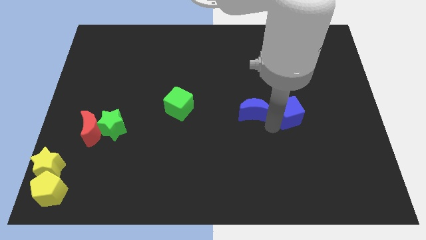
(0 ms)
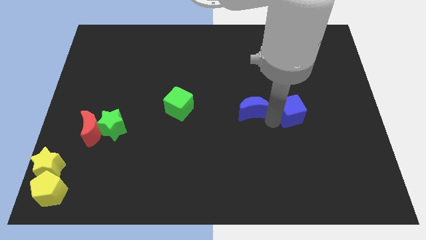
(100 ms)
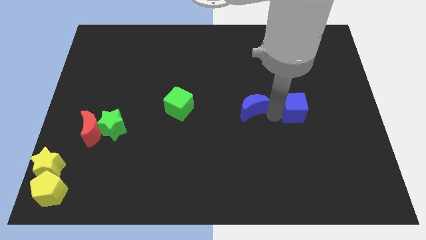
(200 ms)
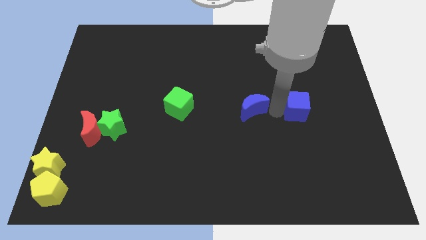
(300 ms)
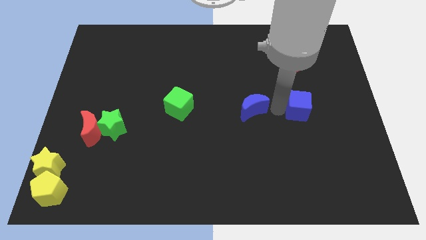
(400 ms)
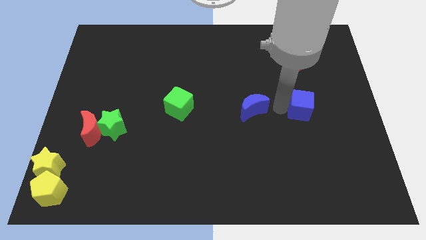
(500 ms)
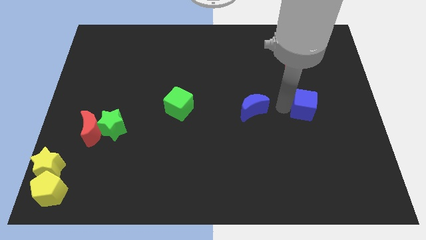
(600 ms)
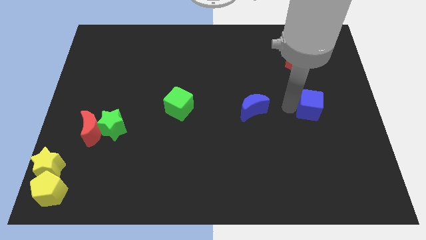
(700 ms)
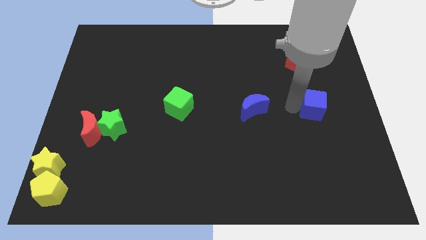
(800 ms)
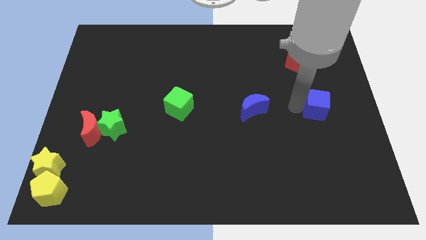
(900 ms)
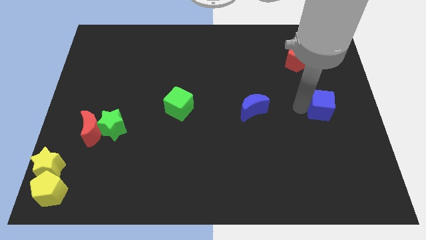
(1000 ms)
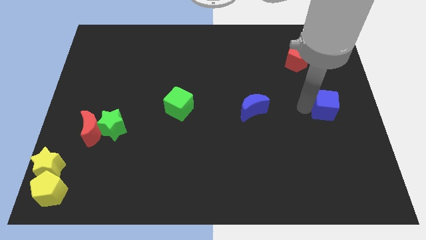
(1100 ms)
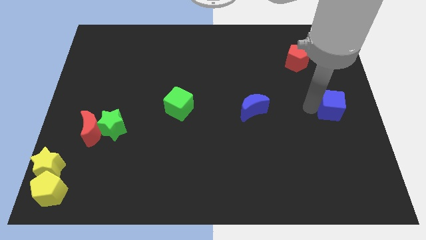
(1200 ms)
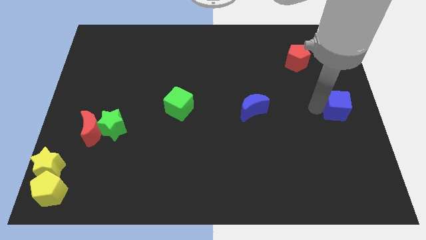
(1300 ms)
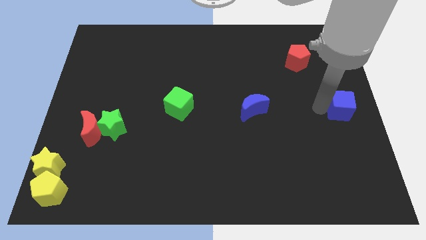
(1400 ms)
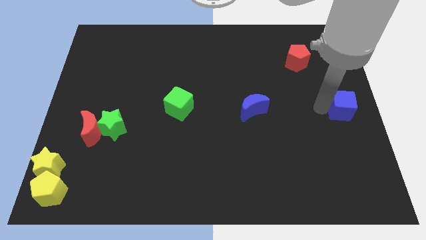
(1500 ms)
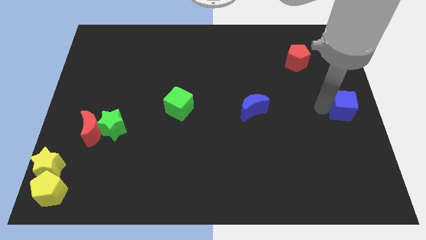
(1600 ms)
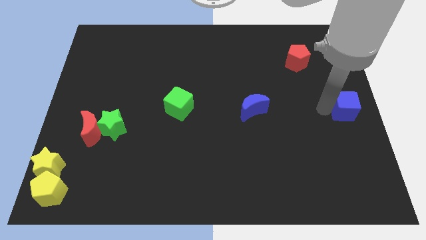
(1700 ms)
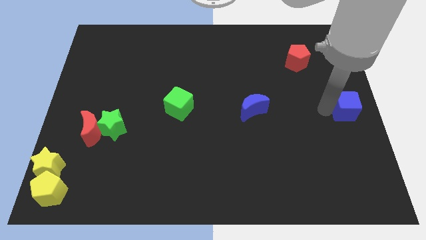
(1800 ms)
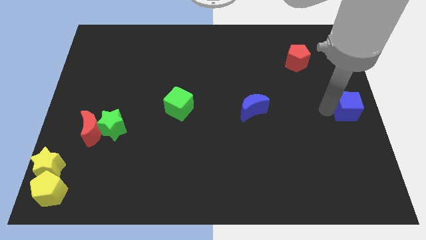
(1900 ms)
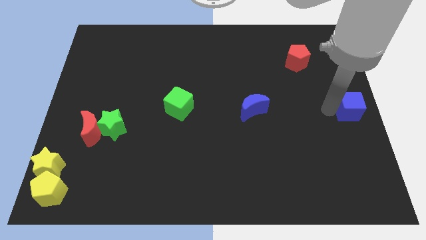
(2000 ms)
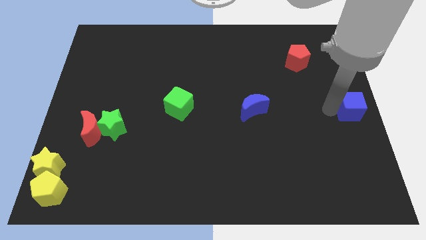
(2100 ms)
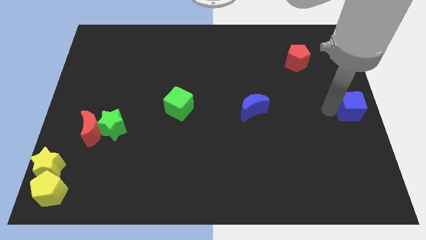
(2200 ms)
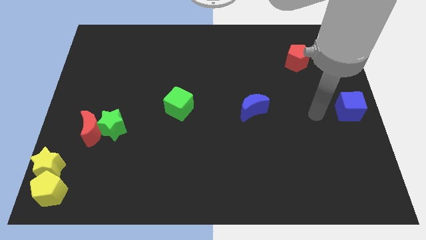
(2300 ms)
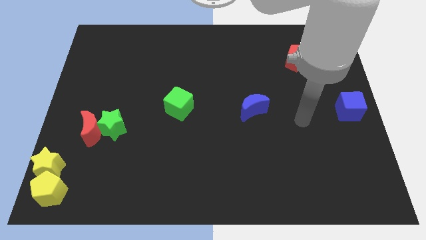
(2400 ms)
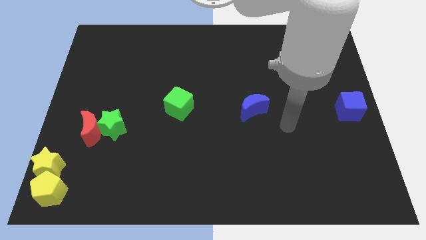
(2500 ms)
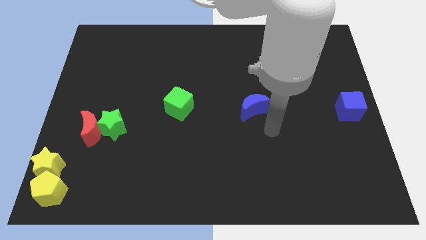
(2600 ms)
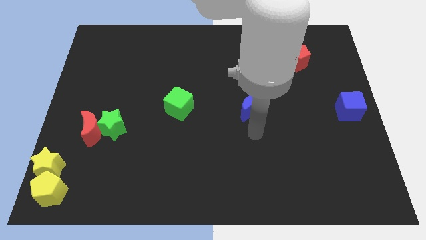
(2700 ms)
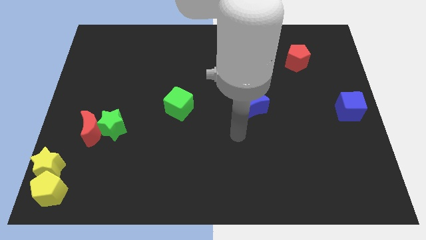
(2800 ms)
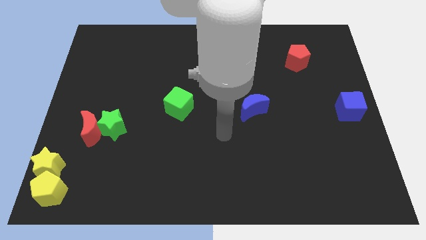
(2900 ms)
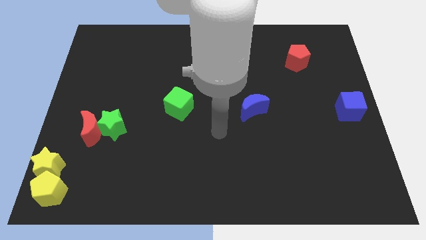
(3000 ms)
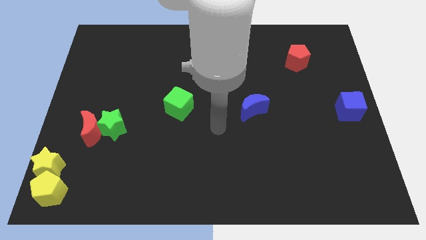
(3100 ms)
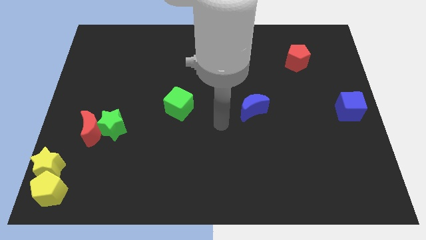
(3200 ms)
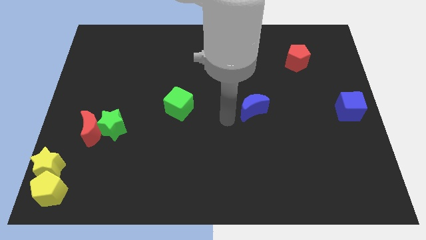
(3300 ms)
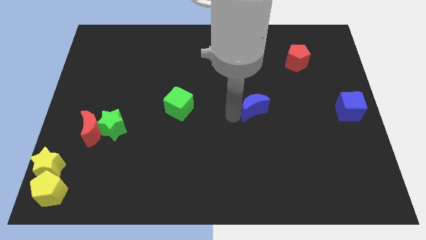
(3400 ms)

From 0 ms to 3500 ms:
push the blue cube towards right center of the board

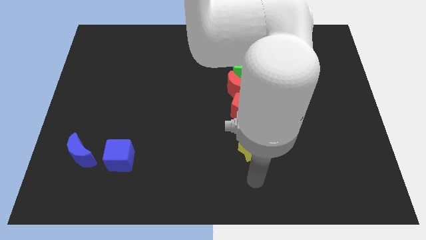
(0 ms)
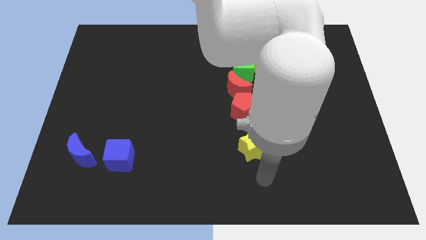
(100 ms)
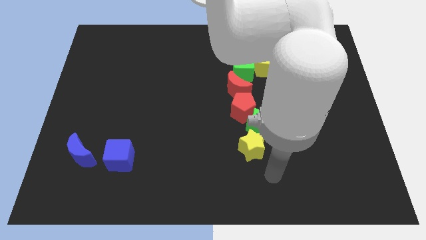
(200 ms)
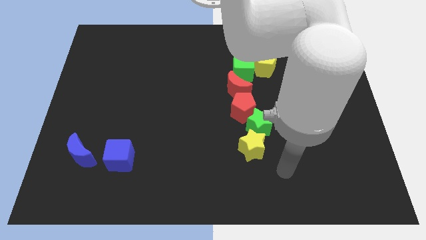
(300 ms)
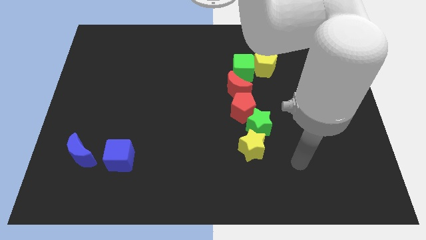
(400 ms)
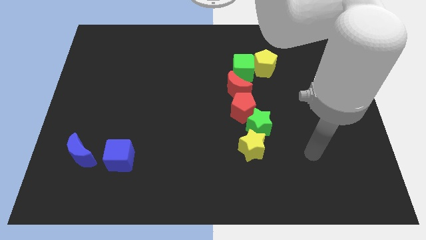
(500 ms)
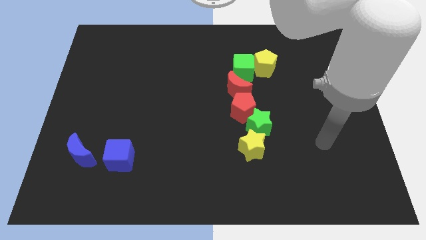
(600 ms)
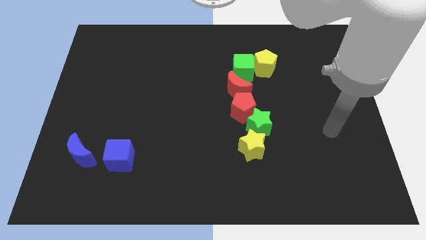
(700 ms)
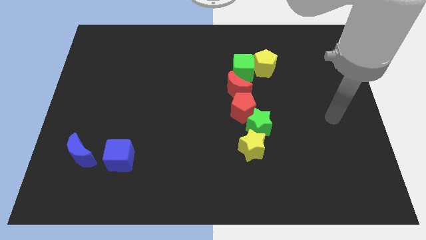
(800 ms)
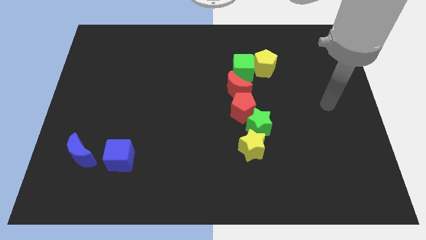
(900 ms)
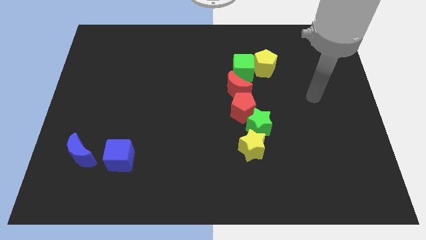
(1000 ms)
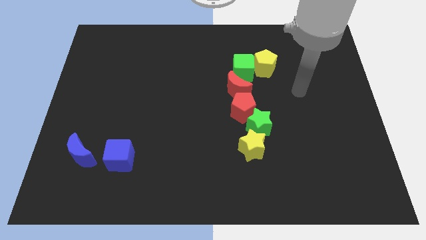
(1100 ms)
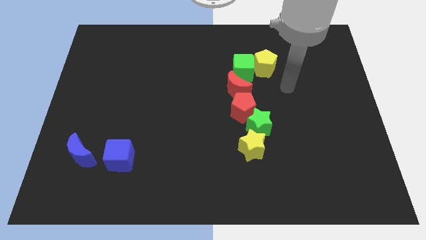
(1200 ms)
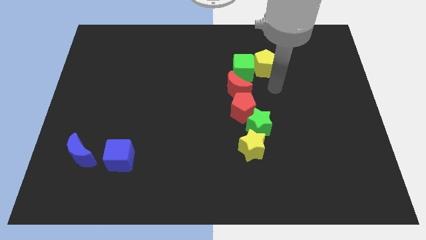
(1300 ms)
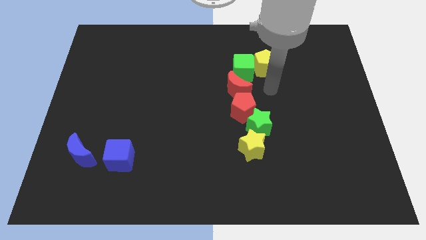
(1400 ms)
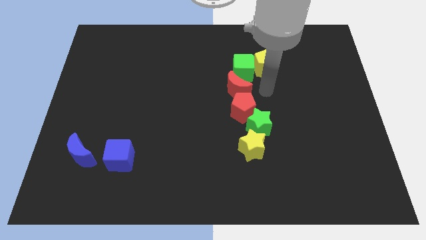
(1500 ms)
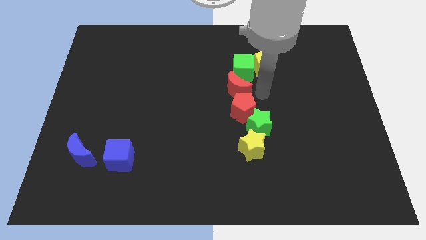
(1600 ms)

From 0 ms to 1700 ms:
move your arm towards the ted moon

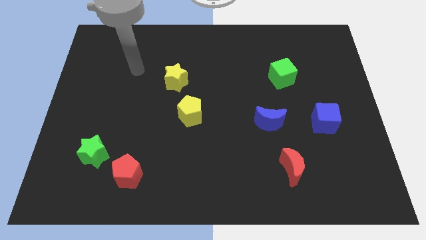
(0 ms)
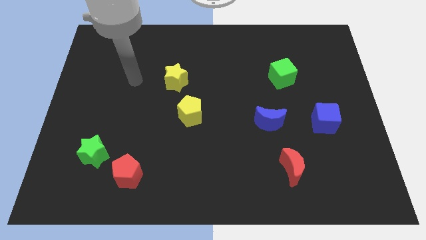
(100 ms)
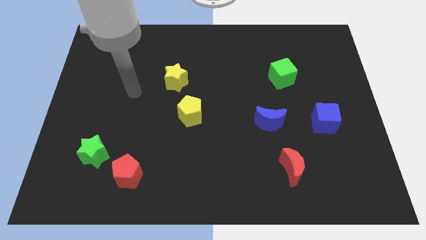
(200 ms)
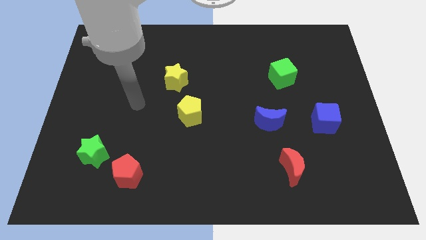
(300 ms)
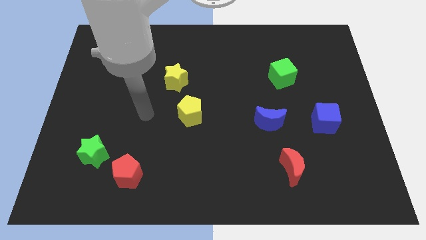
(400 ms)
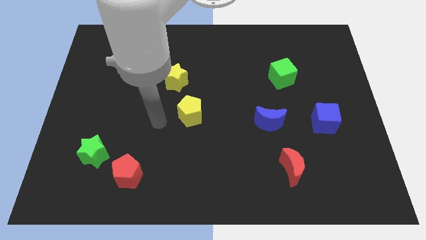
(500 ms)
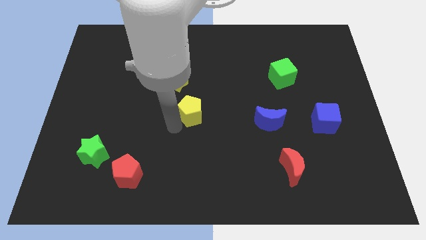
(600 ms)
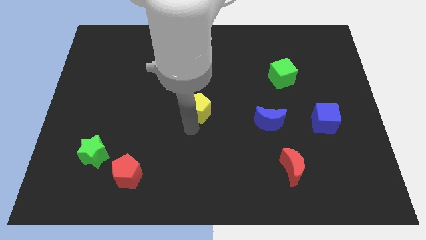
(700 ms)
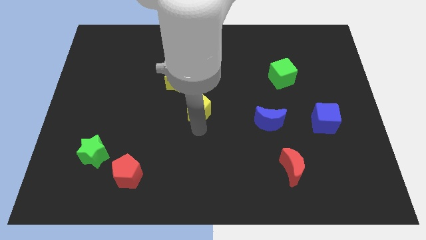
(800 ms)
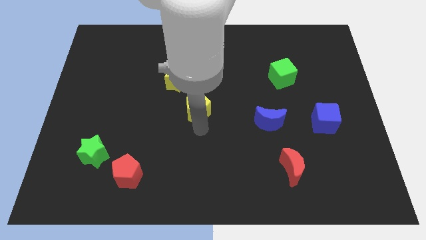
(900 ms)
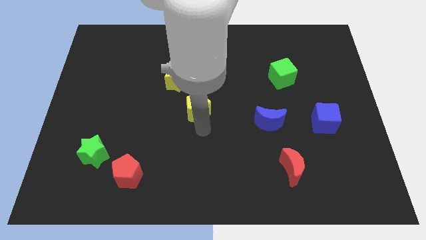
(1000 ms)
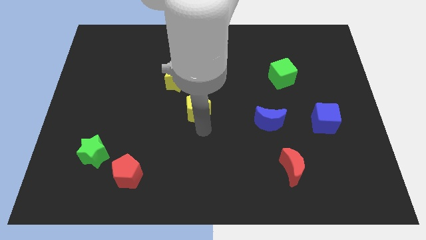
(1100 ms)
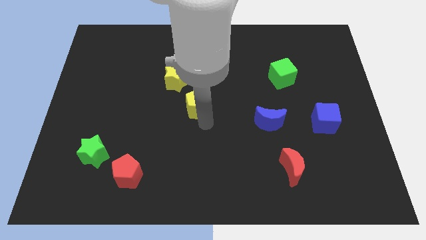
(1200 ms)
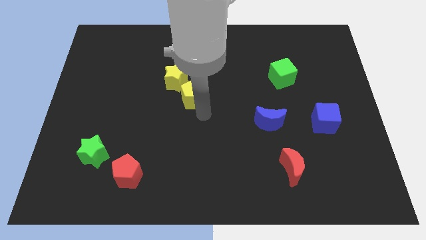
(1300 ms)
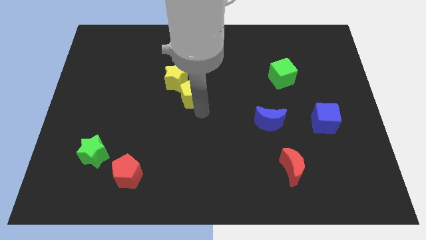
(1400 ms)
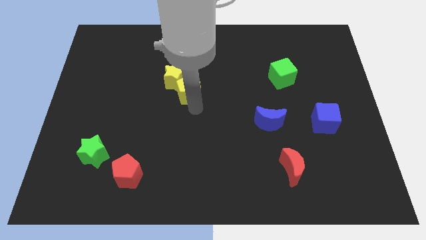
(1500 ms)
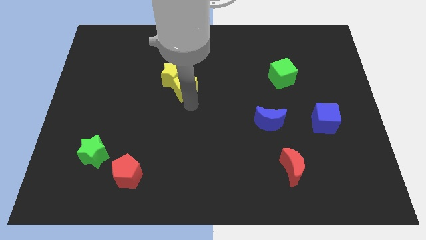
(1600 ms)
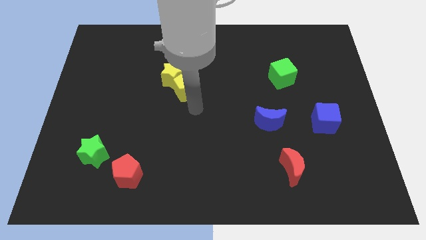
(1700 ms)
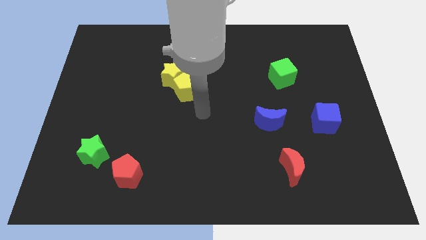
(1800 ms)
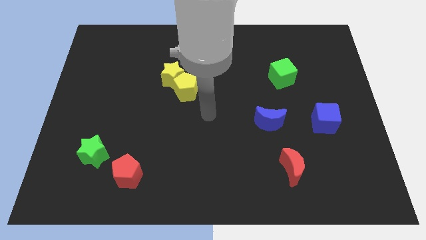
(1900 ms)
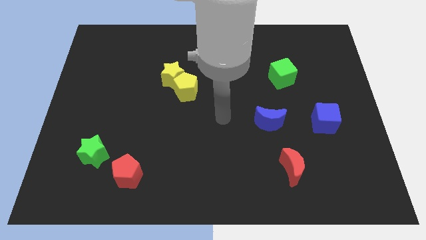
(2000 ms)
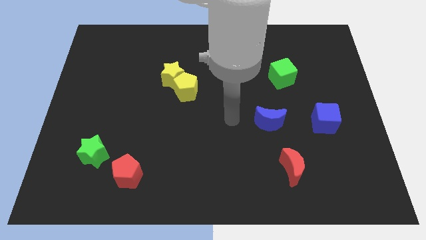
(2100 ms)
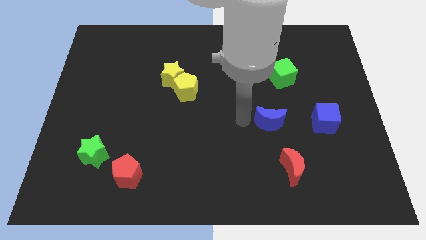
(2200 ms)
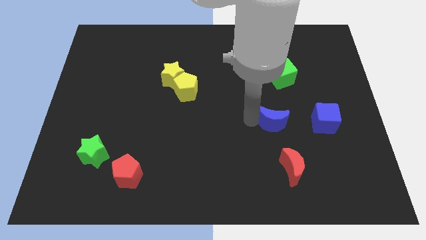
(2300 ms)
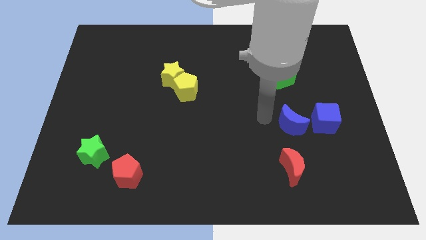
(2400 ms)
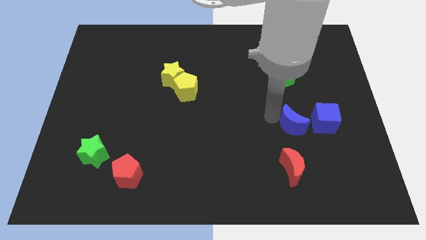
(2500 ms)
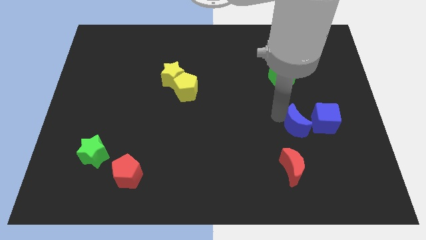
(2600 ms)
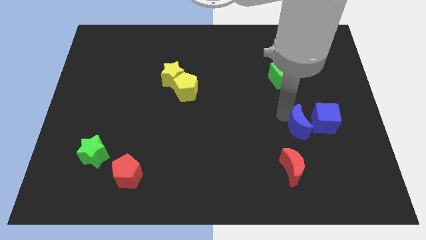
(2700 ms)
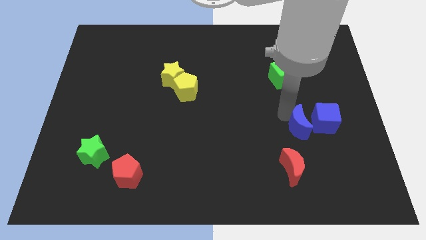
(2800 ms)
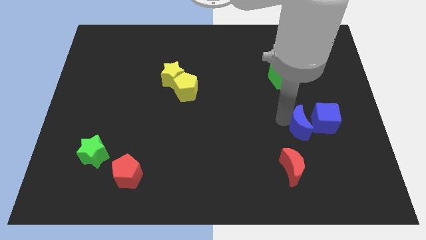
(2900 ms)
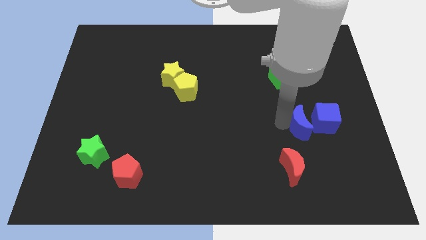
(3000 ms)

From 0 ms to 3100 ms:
move the blue crescent to the left of the blue cube

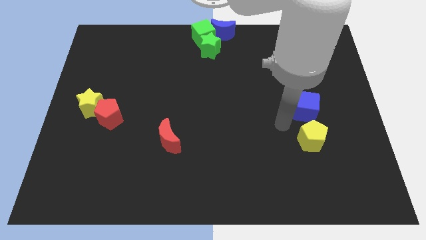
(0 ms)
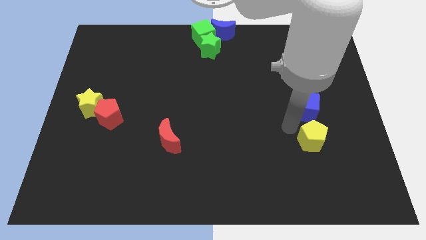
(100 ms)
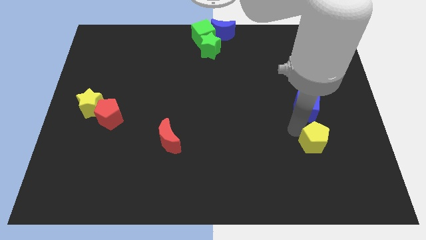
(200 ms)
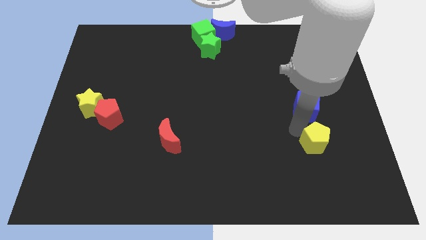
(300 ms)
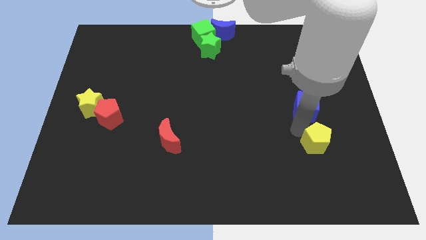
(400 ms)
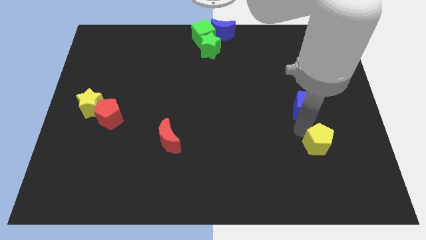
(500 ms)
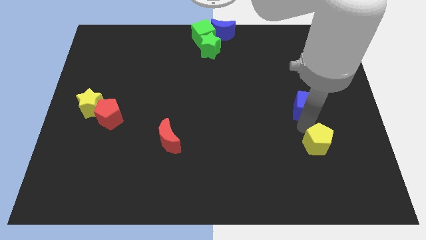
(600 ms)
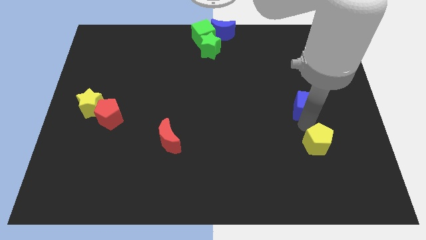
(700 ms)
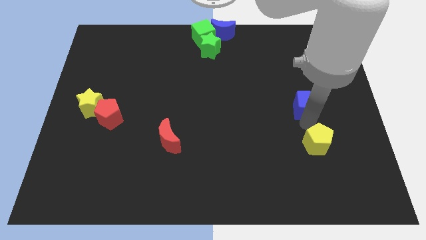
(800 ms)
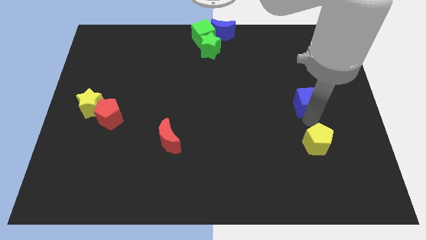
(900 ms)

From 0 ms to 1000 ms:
point your arm between blue cube and yellow pentagon
